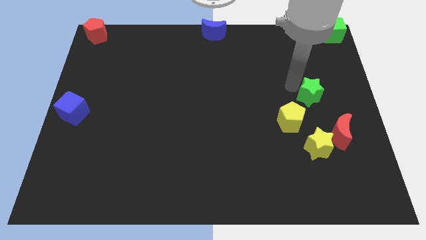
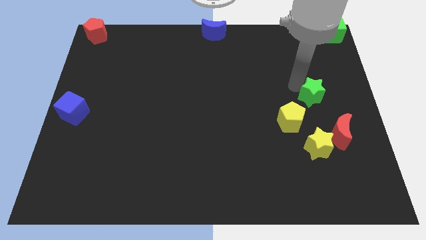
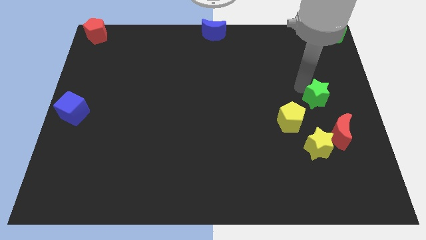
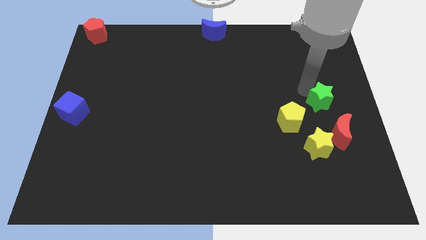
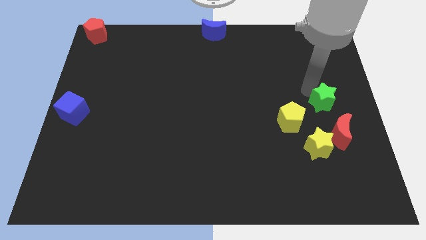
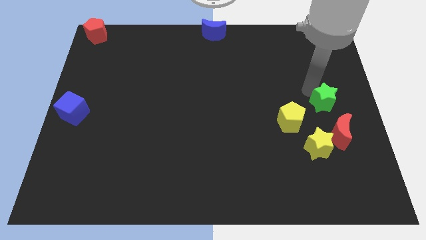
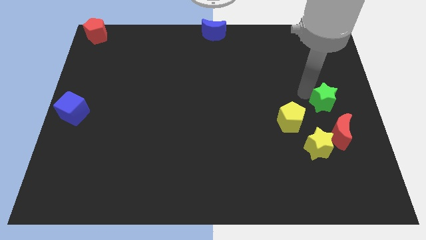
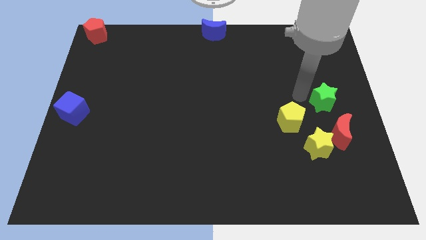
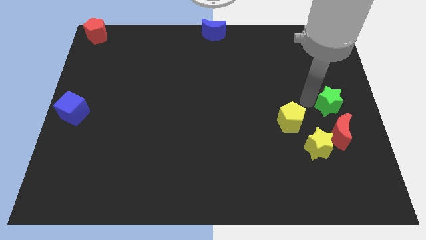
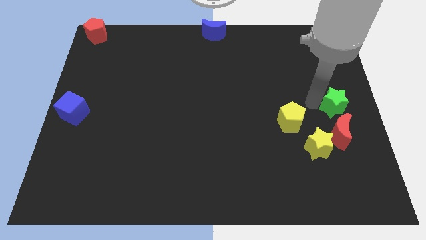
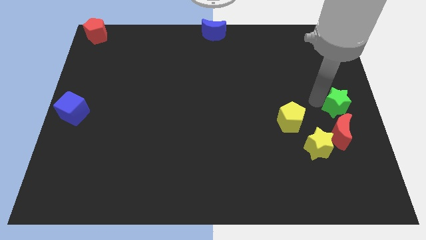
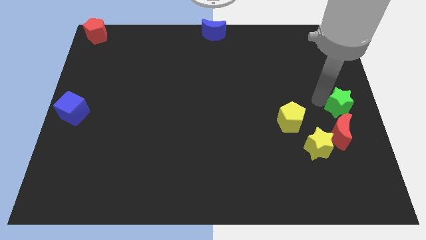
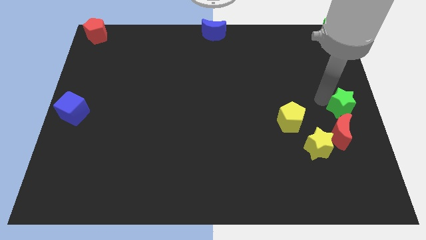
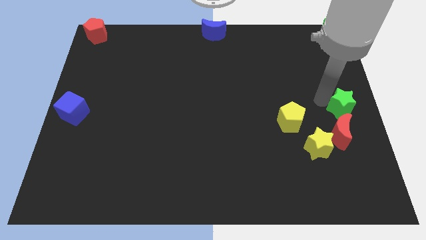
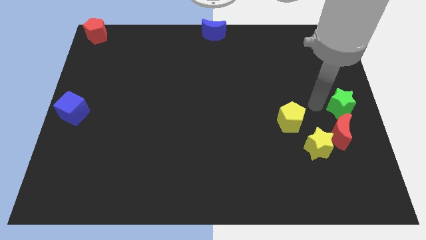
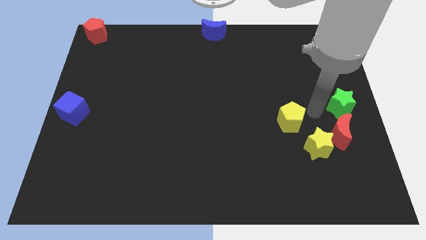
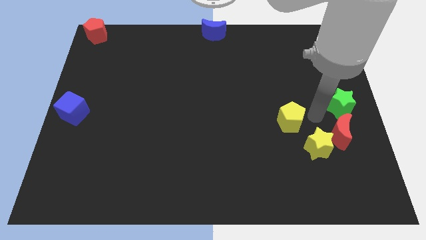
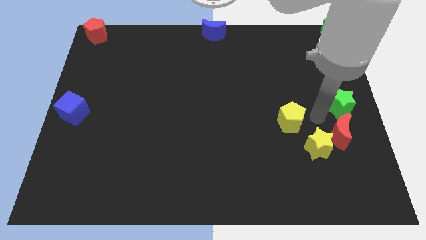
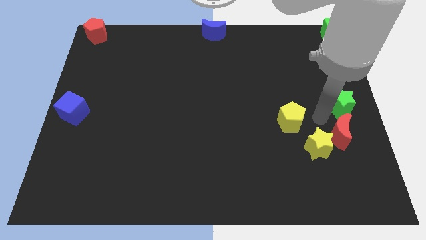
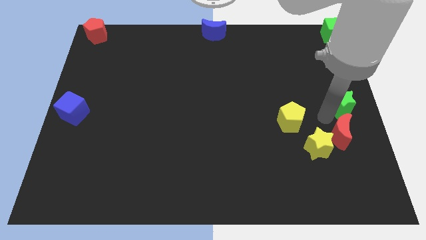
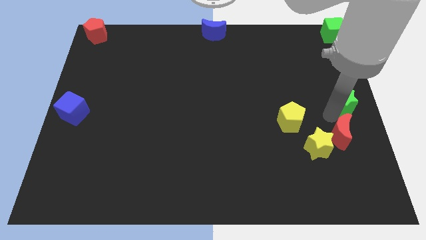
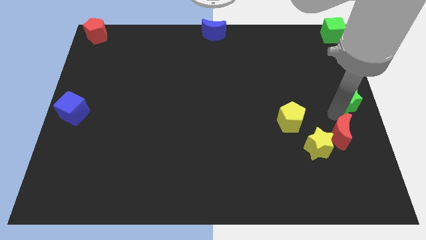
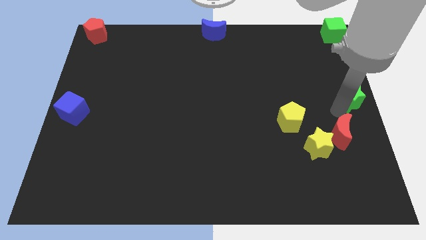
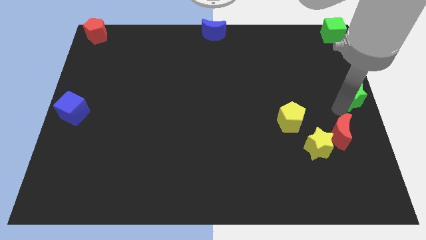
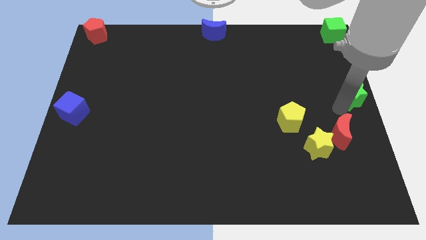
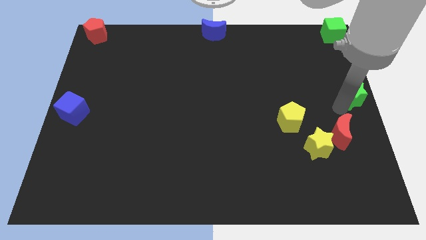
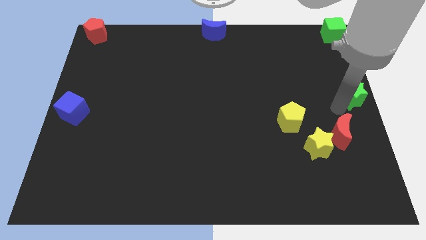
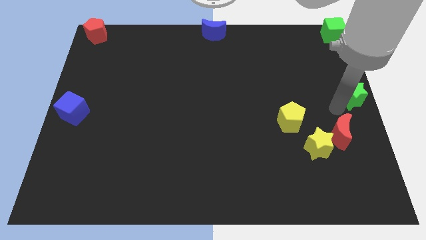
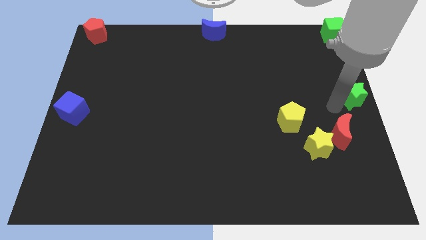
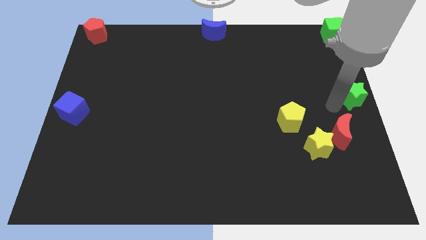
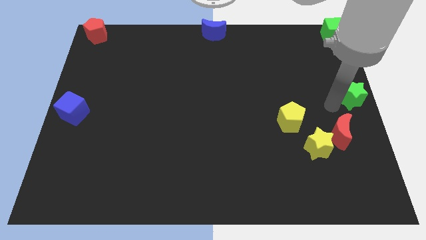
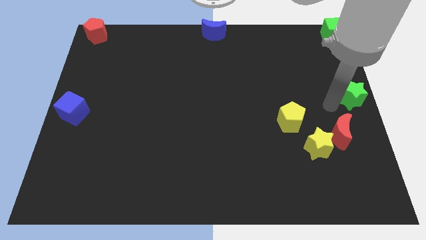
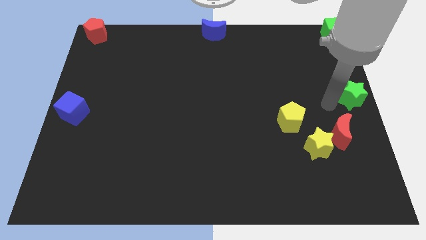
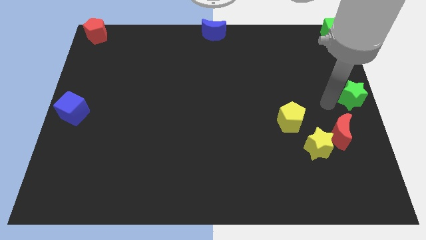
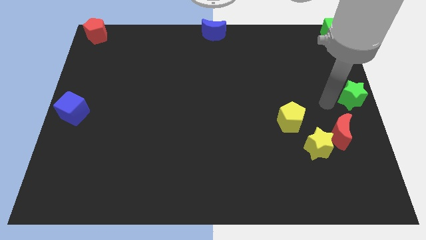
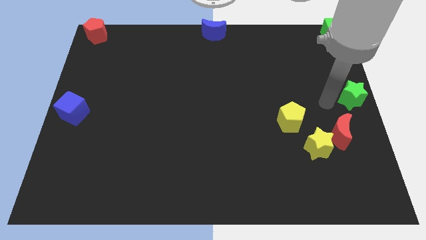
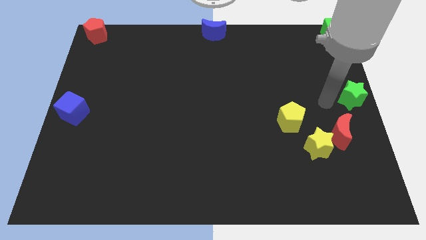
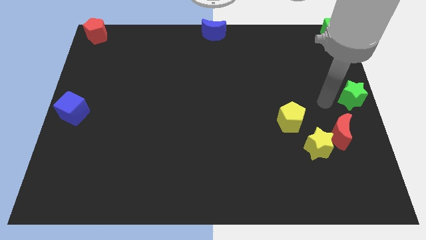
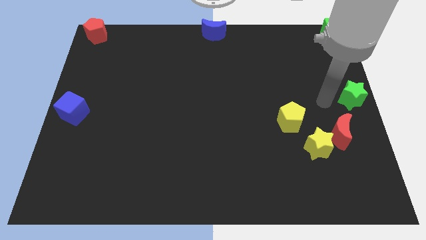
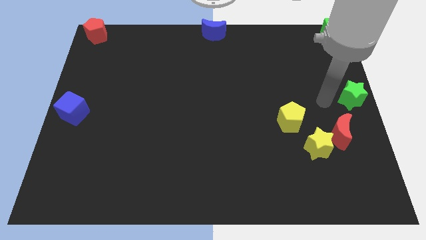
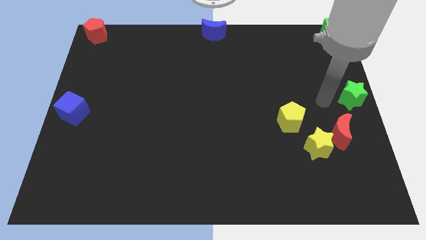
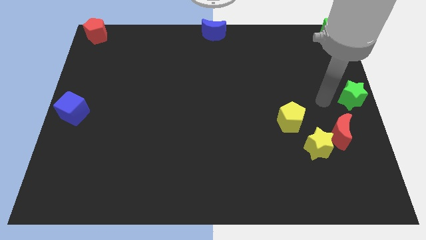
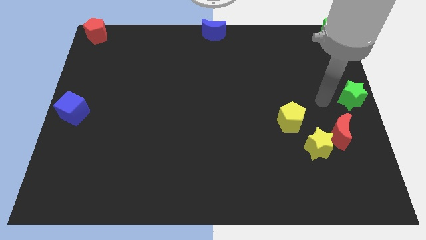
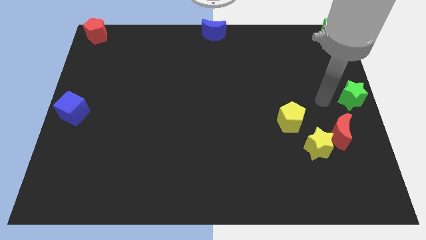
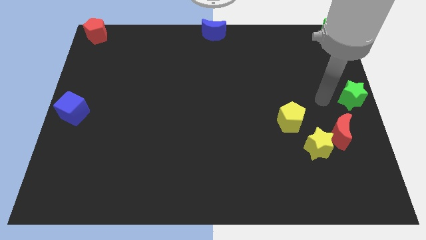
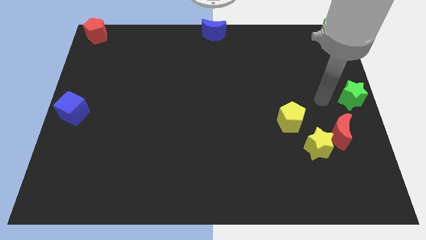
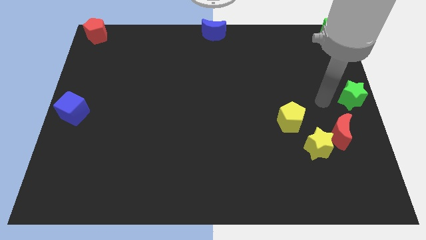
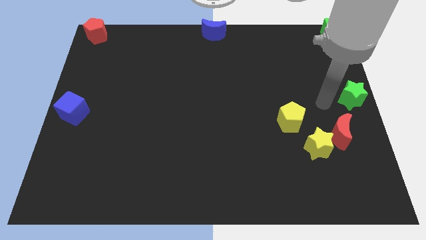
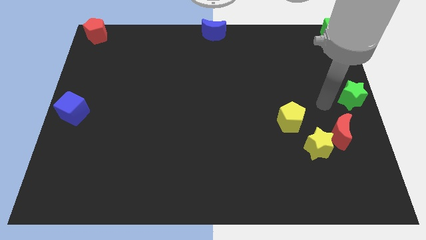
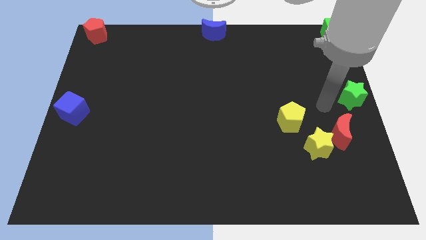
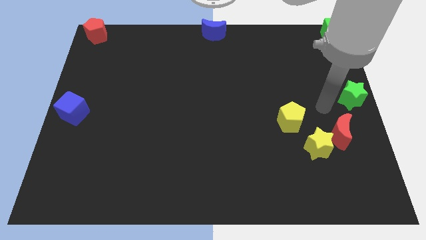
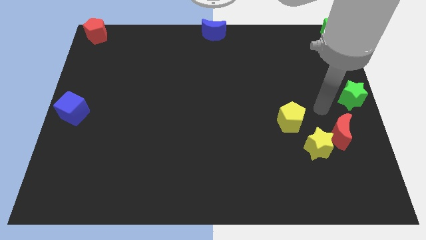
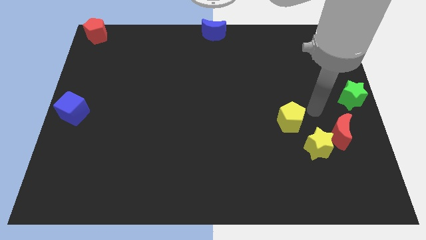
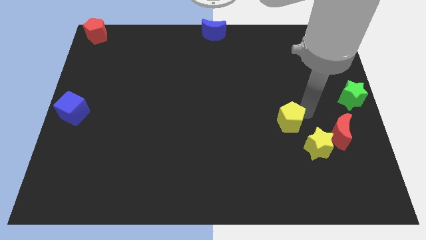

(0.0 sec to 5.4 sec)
push the green star to the center right of the board

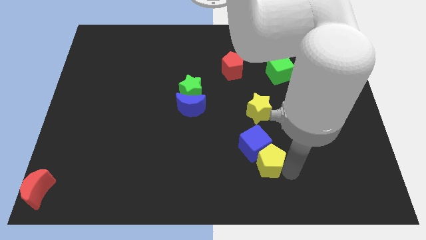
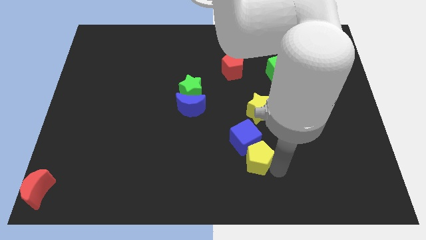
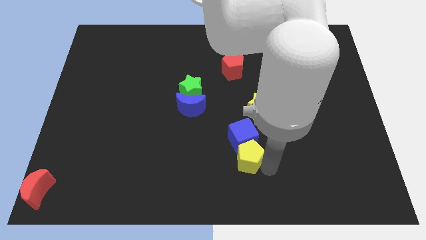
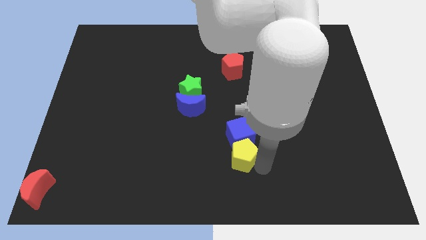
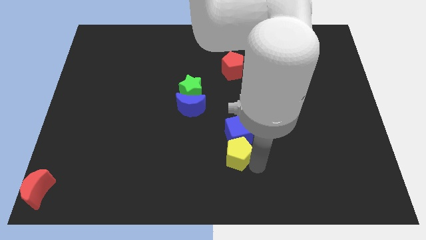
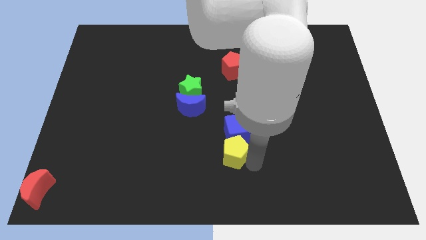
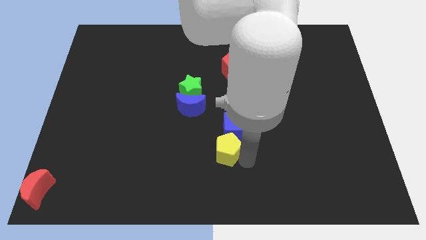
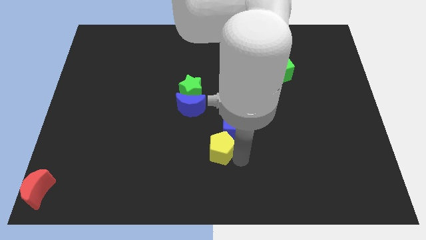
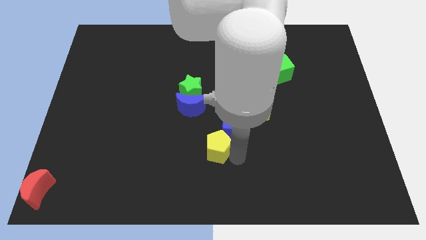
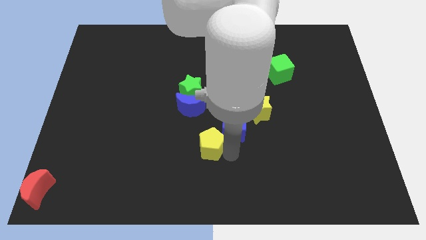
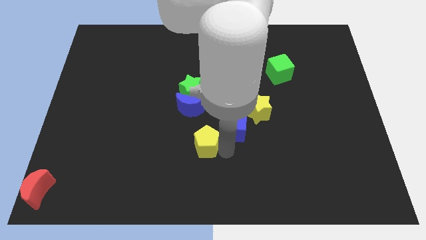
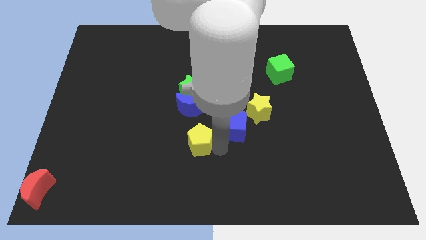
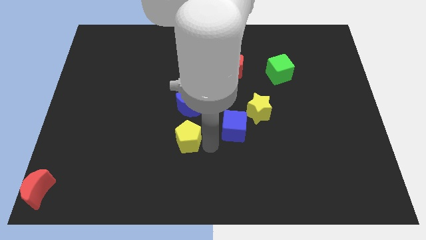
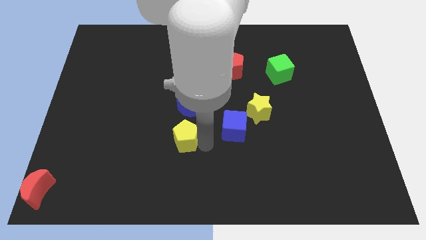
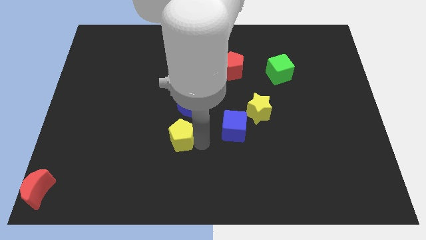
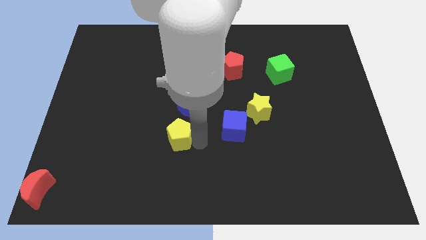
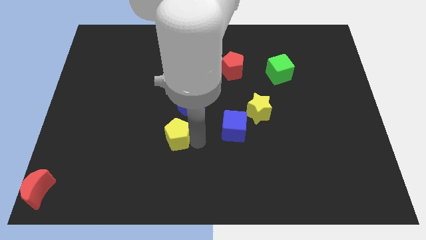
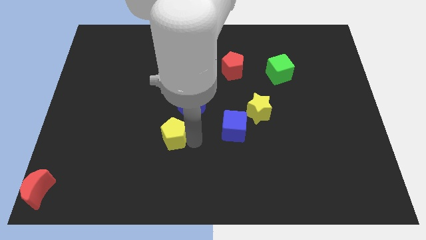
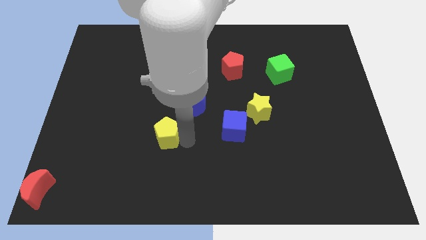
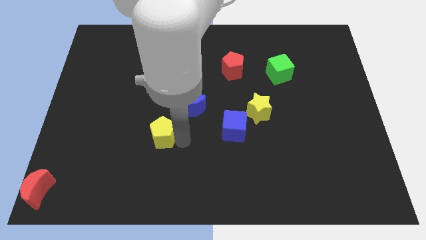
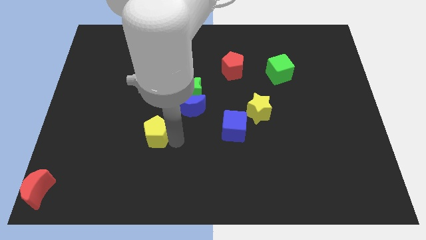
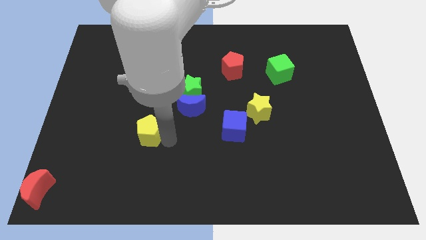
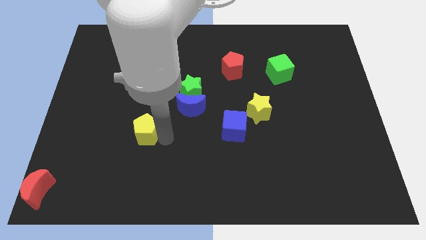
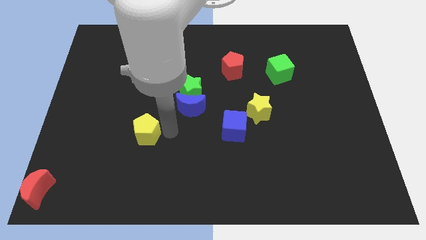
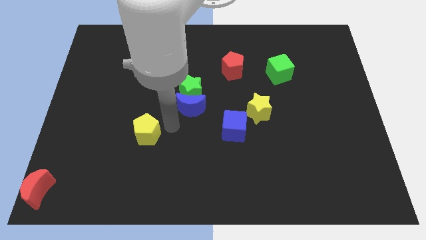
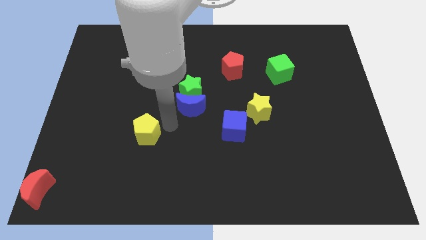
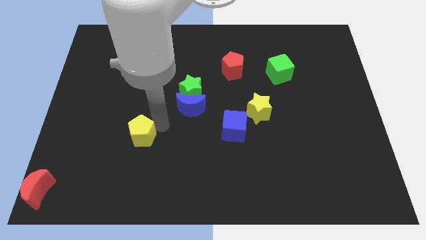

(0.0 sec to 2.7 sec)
place the yellow pentagon diagonally top right to the red moon

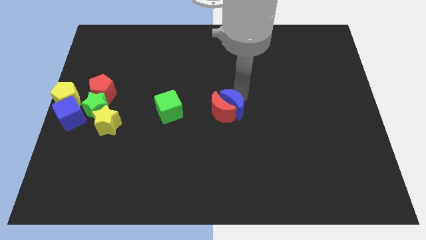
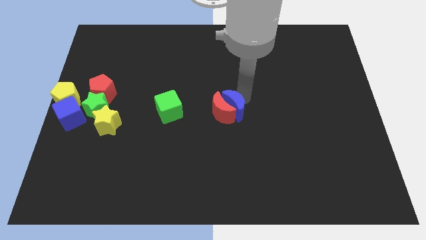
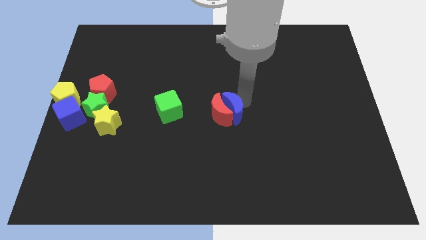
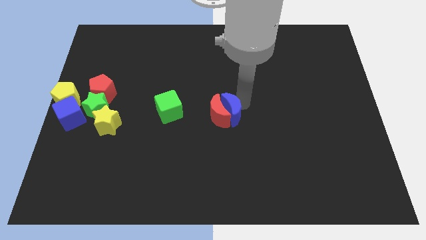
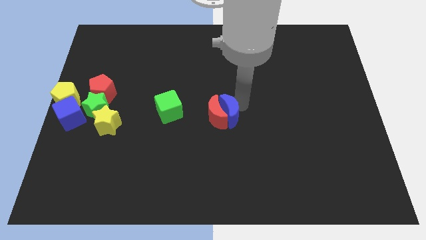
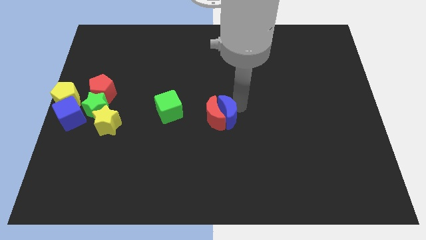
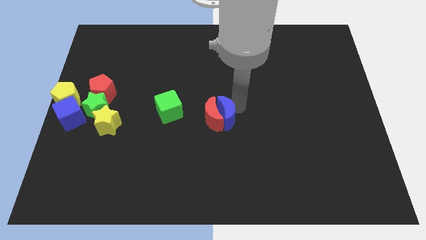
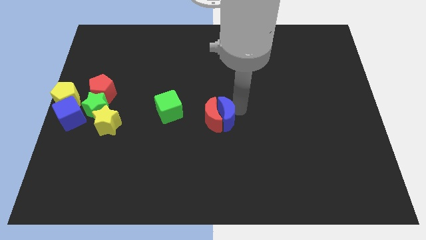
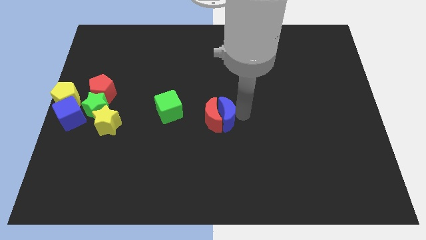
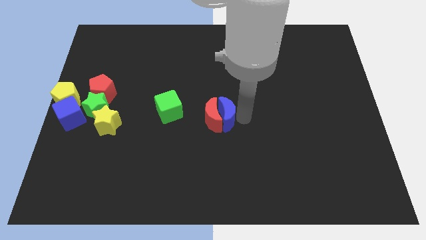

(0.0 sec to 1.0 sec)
push the blue and red crescents to the left
